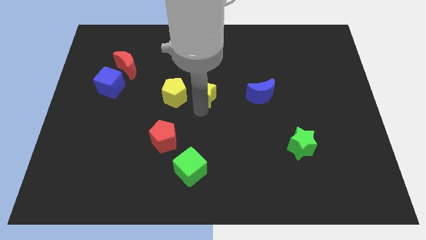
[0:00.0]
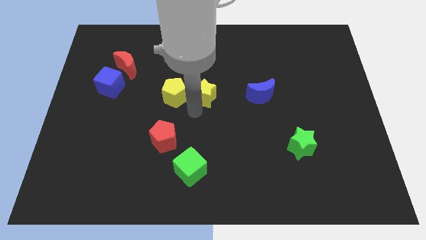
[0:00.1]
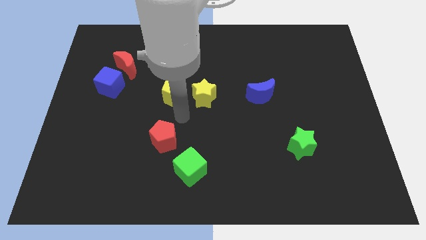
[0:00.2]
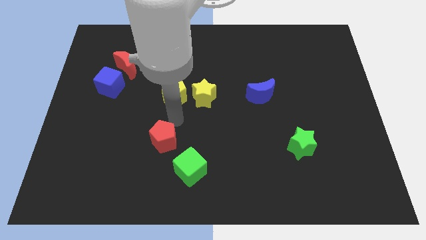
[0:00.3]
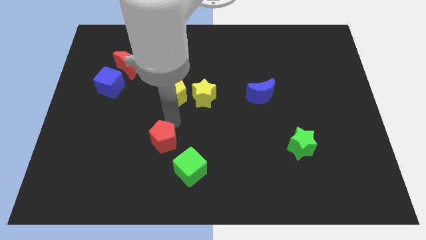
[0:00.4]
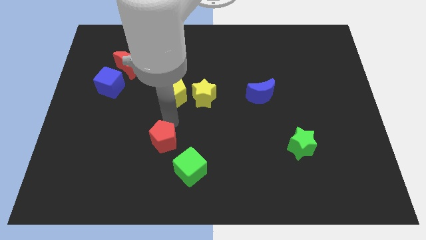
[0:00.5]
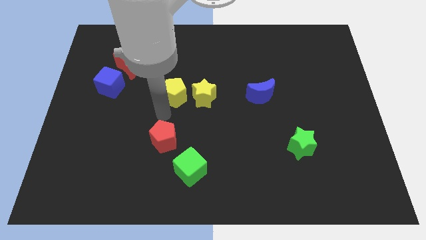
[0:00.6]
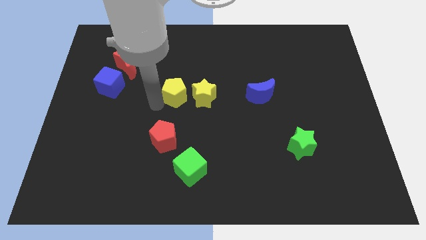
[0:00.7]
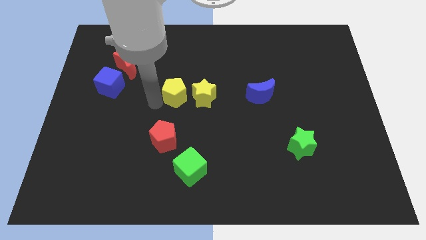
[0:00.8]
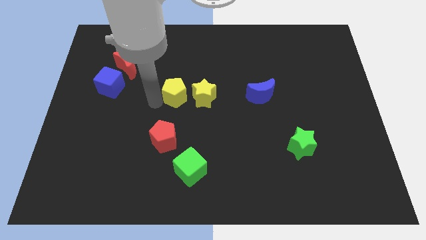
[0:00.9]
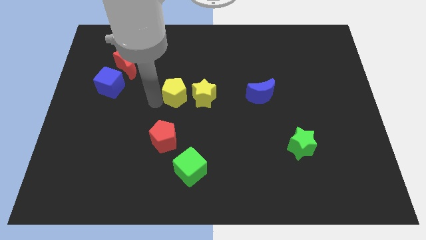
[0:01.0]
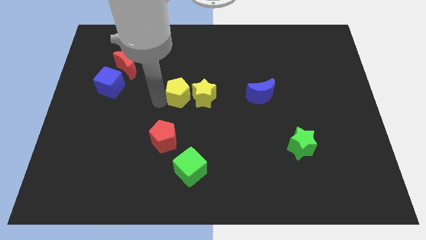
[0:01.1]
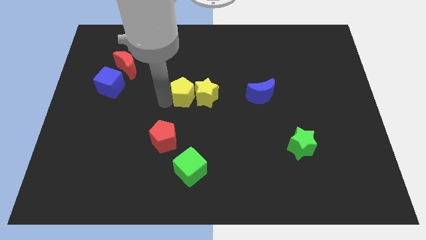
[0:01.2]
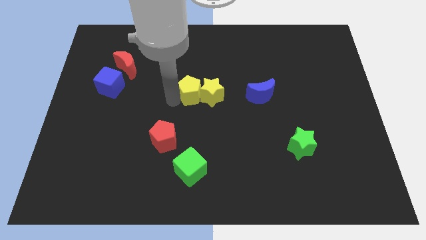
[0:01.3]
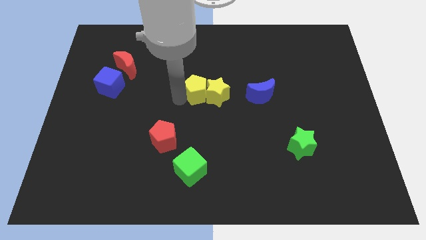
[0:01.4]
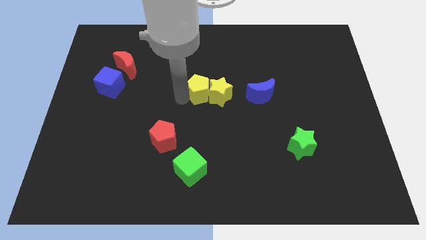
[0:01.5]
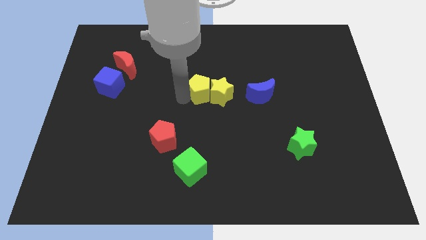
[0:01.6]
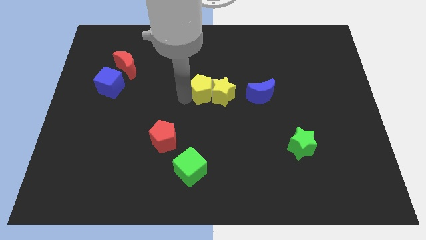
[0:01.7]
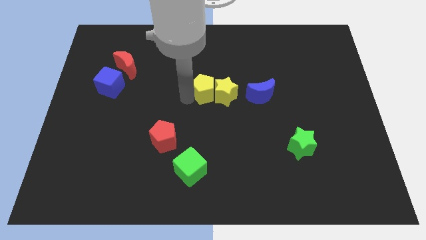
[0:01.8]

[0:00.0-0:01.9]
put the yellow pentagon into the yellow star

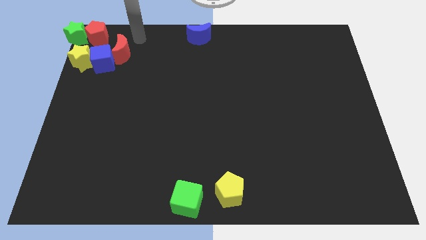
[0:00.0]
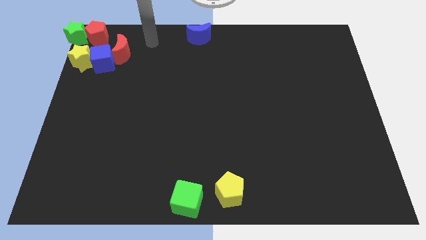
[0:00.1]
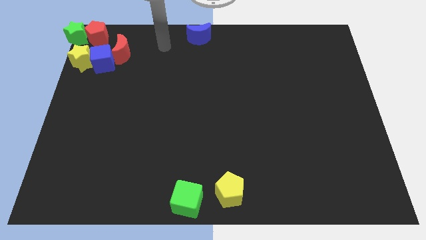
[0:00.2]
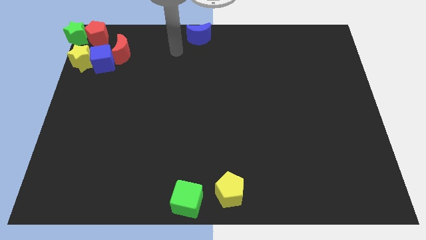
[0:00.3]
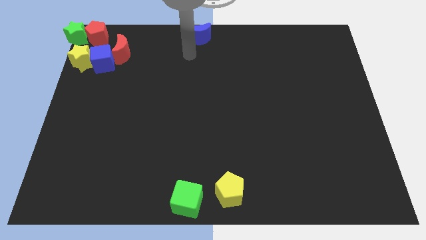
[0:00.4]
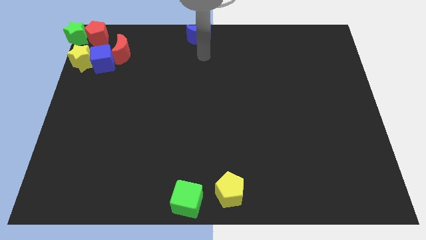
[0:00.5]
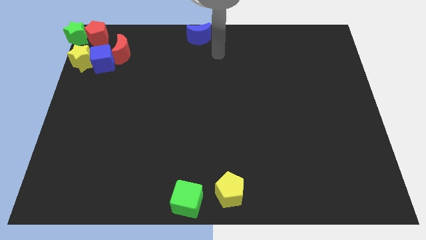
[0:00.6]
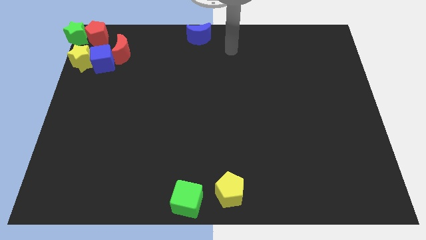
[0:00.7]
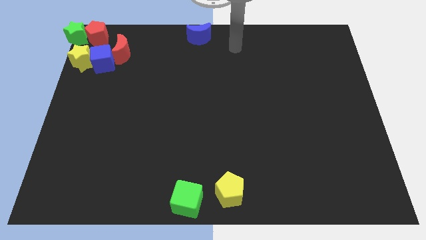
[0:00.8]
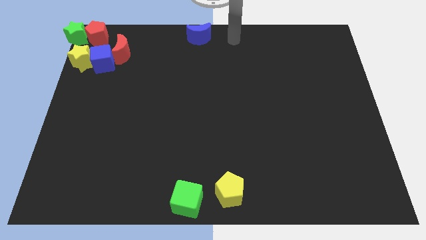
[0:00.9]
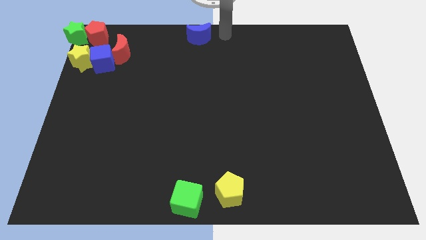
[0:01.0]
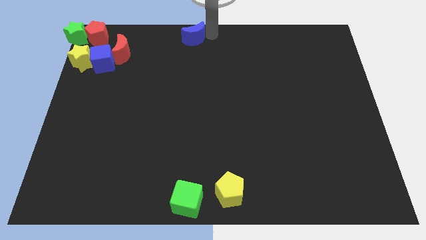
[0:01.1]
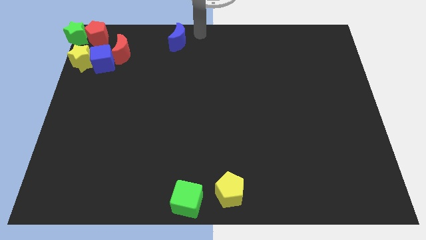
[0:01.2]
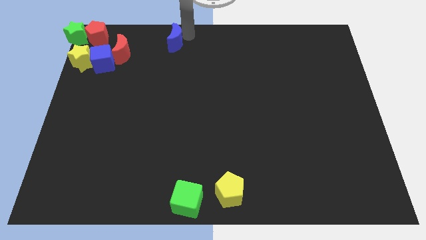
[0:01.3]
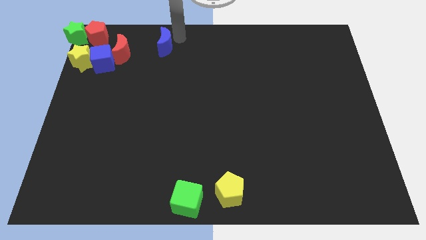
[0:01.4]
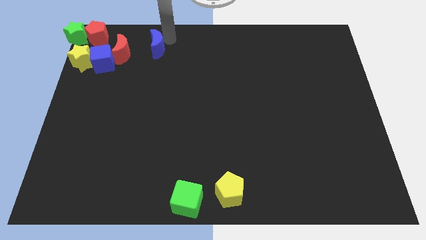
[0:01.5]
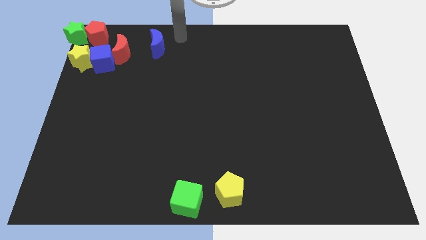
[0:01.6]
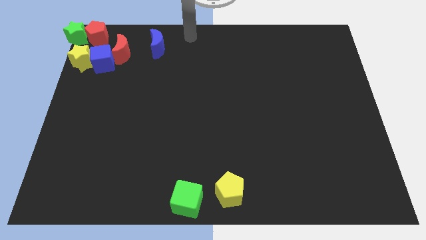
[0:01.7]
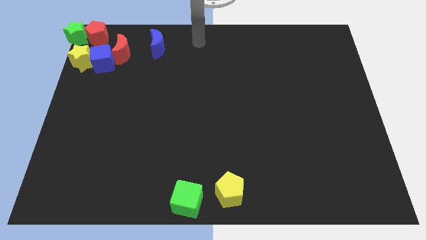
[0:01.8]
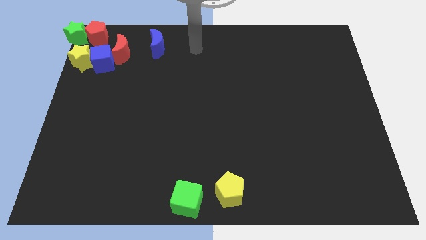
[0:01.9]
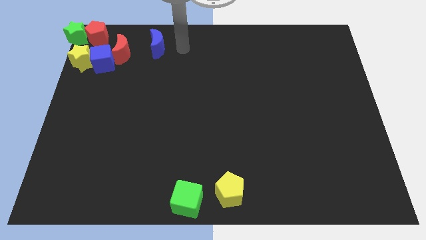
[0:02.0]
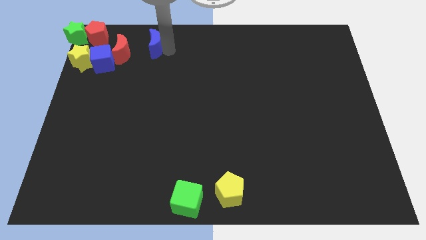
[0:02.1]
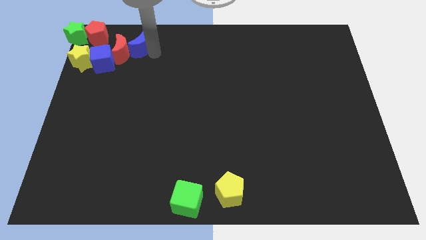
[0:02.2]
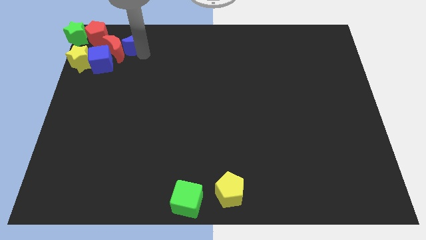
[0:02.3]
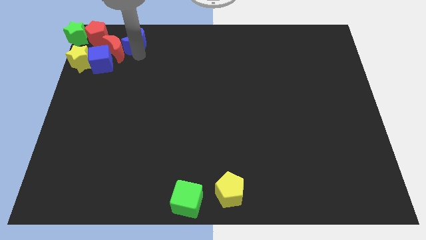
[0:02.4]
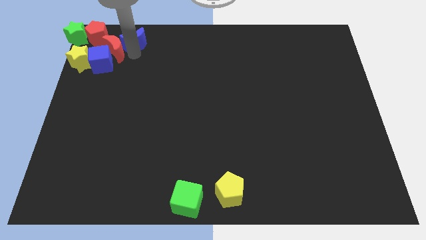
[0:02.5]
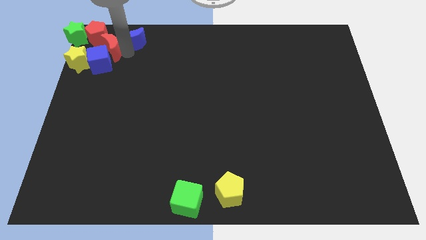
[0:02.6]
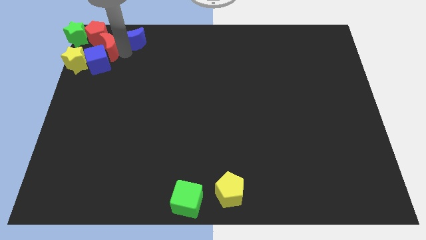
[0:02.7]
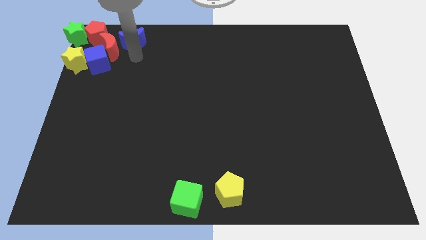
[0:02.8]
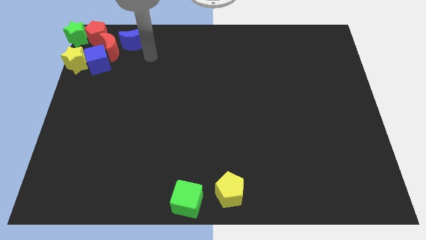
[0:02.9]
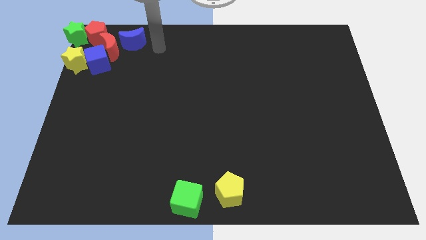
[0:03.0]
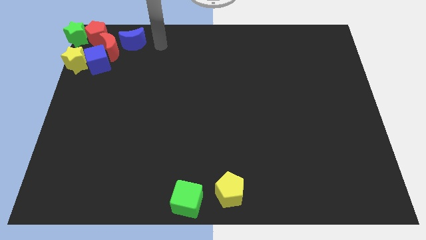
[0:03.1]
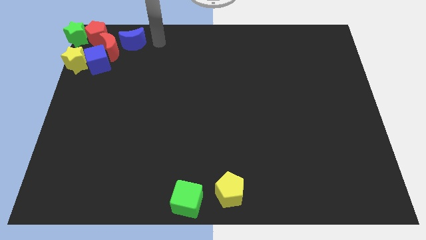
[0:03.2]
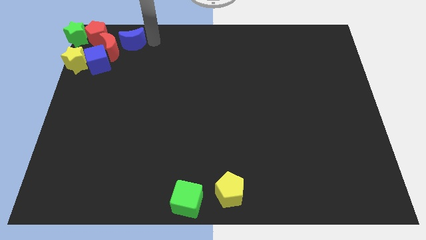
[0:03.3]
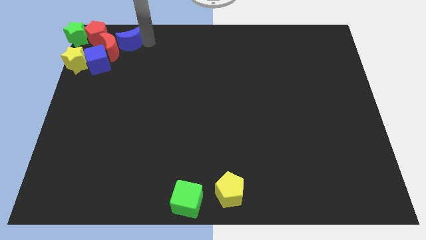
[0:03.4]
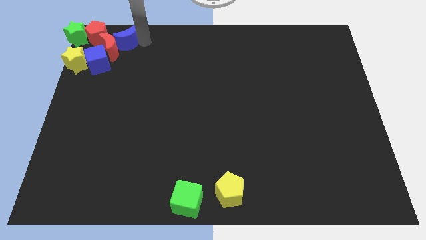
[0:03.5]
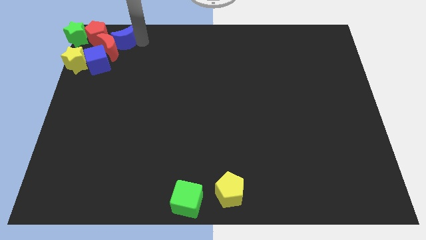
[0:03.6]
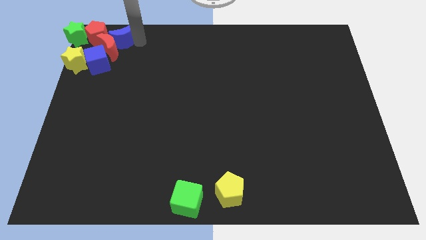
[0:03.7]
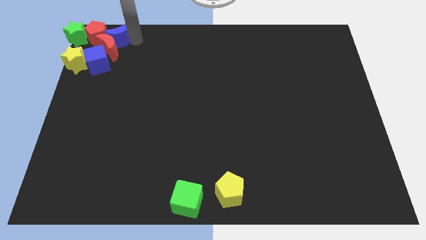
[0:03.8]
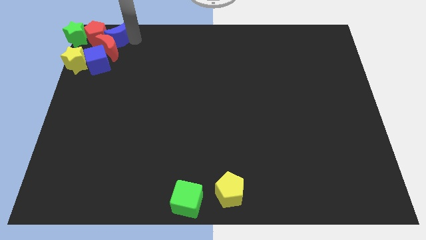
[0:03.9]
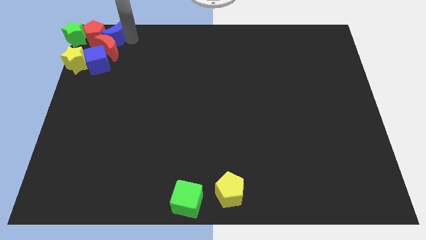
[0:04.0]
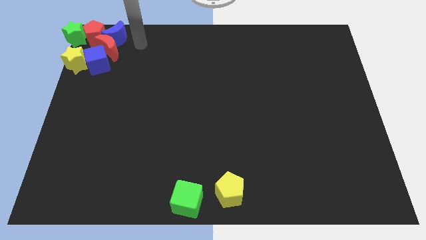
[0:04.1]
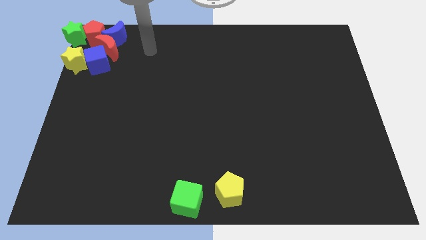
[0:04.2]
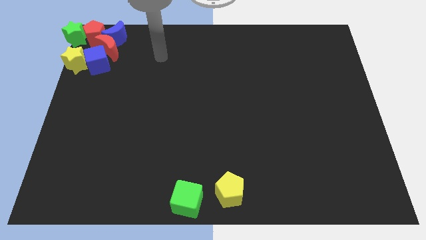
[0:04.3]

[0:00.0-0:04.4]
push blue moon into the red moon

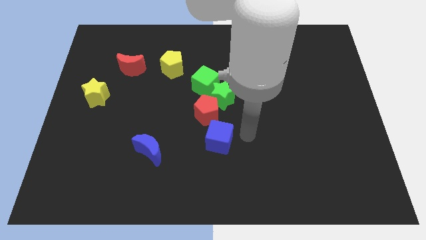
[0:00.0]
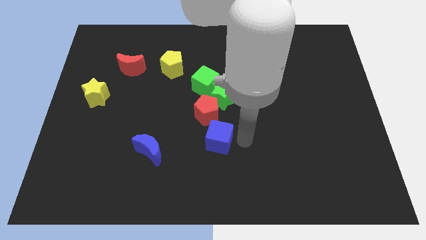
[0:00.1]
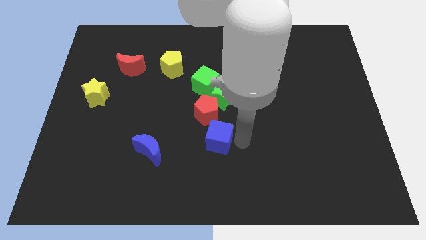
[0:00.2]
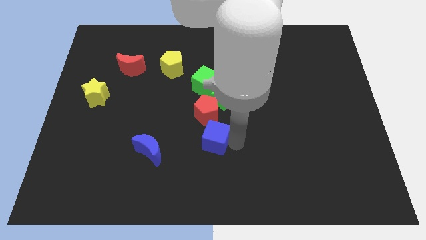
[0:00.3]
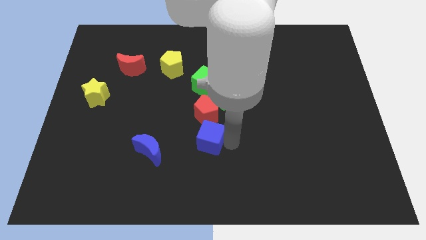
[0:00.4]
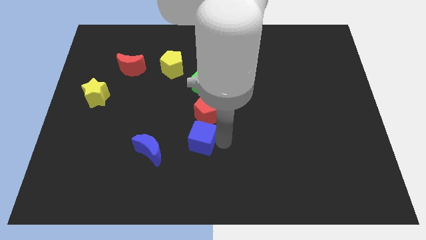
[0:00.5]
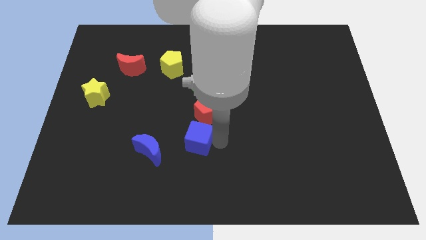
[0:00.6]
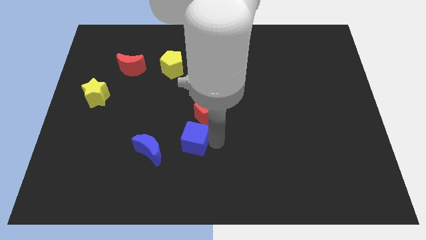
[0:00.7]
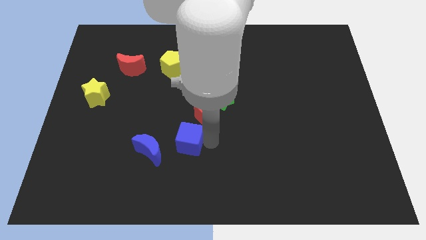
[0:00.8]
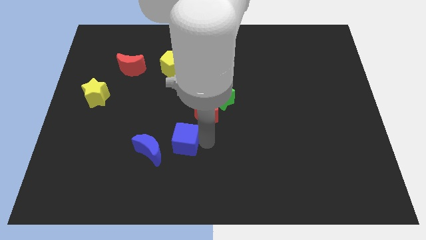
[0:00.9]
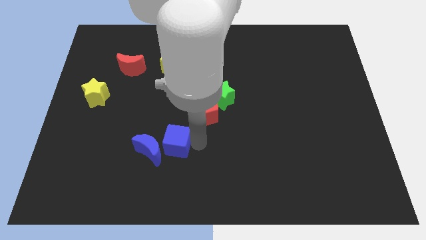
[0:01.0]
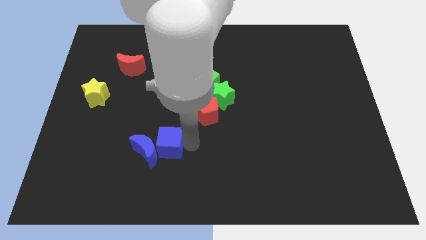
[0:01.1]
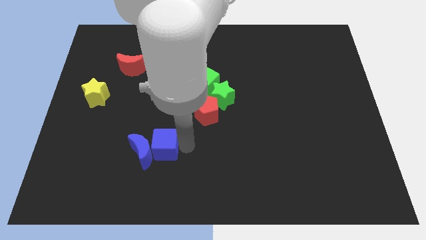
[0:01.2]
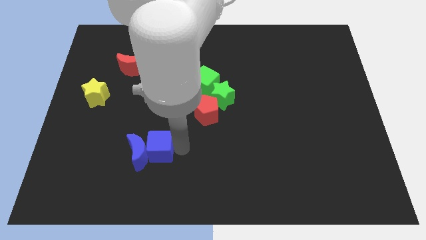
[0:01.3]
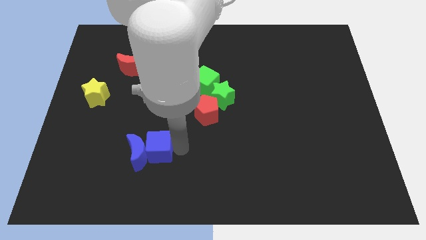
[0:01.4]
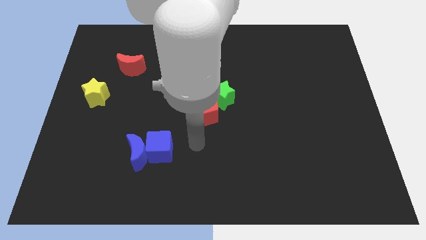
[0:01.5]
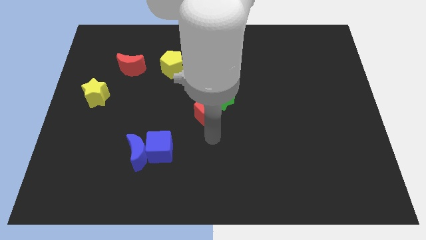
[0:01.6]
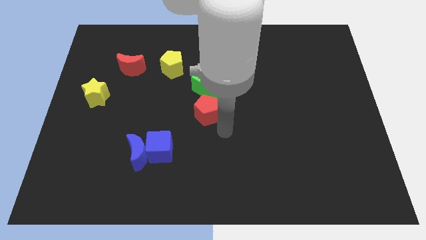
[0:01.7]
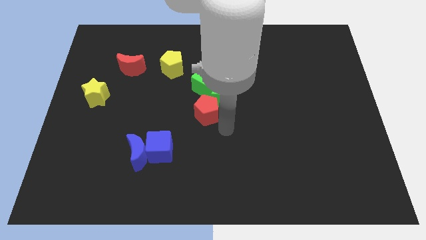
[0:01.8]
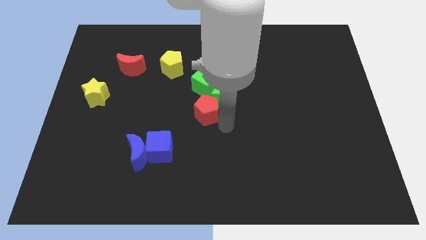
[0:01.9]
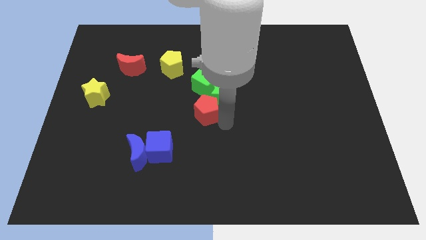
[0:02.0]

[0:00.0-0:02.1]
push blue cube into blue moon

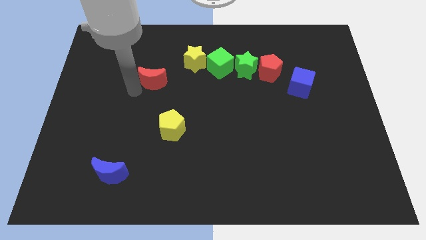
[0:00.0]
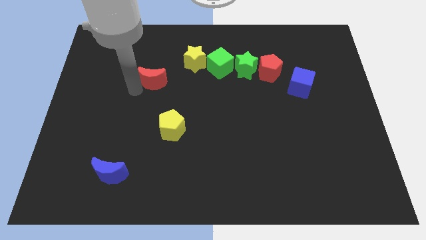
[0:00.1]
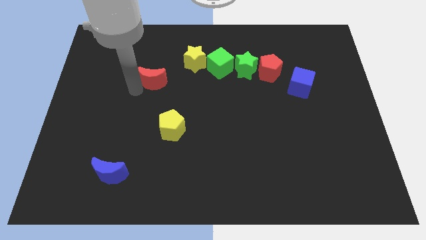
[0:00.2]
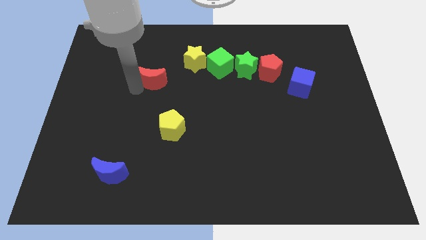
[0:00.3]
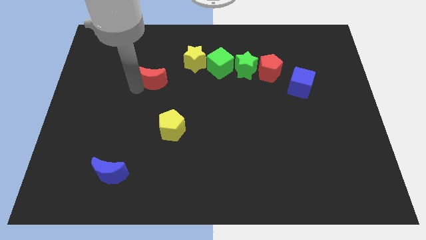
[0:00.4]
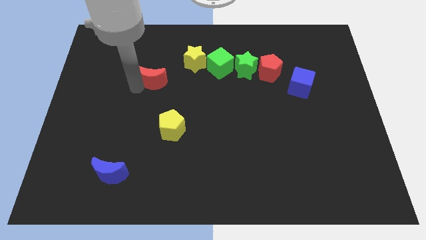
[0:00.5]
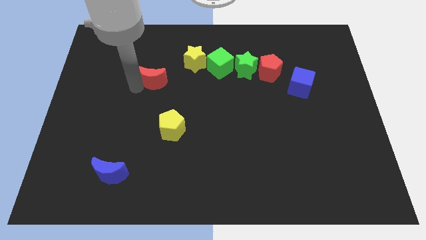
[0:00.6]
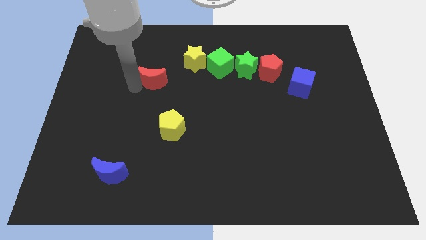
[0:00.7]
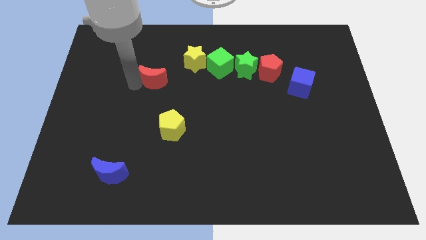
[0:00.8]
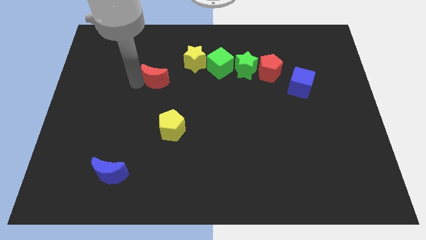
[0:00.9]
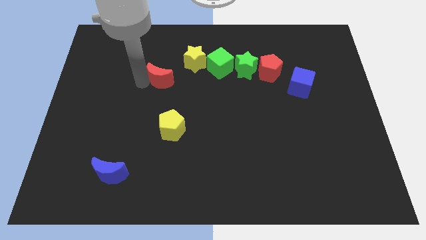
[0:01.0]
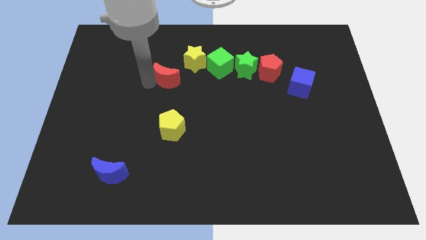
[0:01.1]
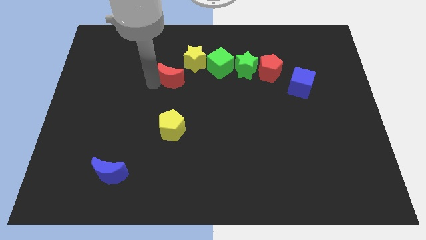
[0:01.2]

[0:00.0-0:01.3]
move the red moon slightly to the right
